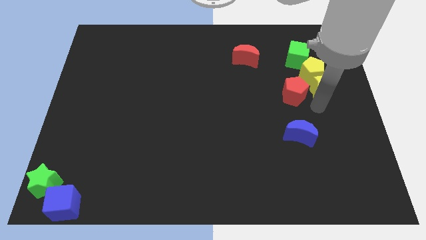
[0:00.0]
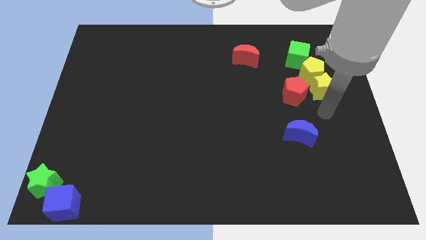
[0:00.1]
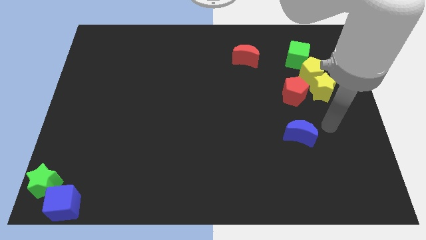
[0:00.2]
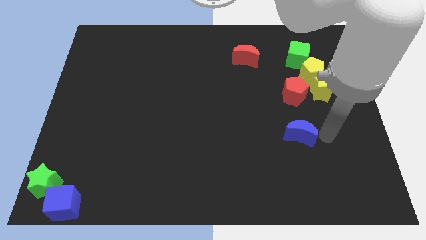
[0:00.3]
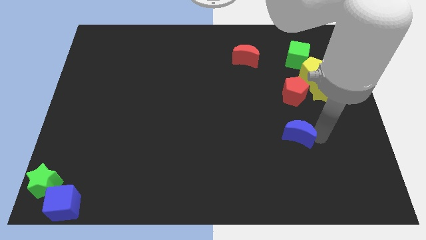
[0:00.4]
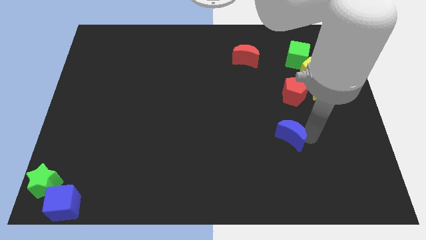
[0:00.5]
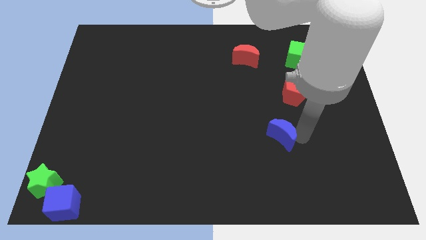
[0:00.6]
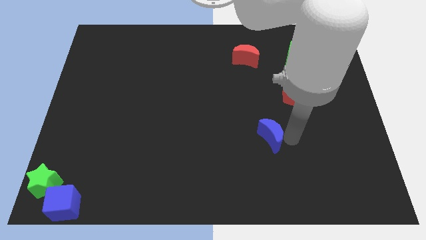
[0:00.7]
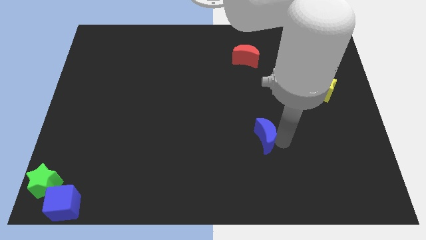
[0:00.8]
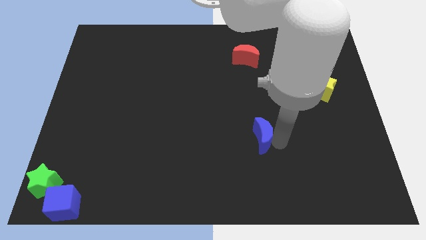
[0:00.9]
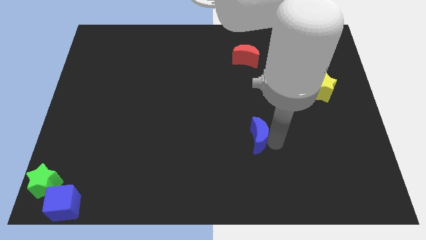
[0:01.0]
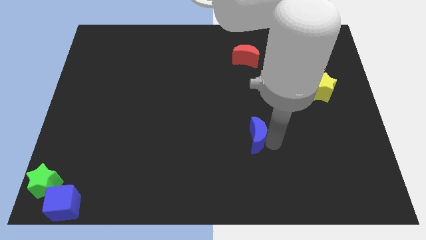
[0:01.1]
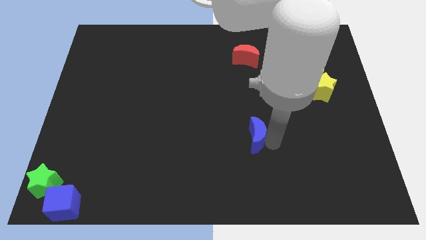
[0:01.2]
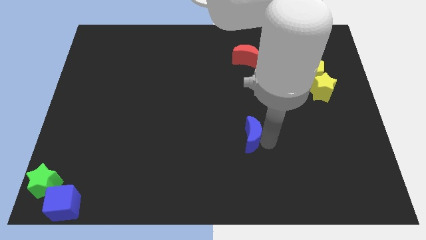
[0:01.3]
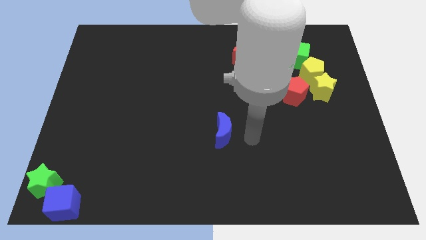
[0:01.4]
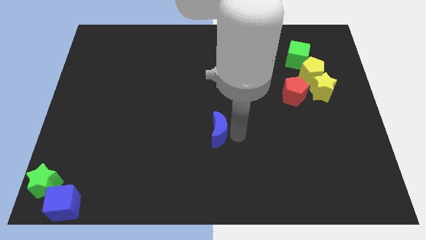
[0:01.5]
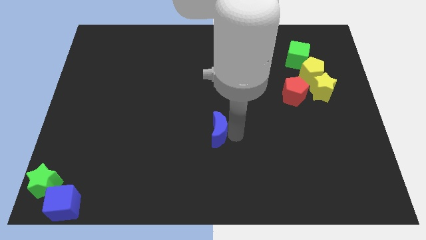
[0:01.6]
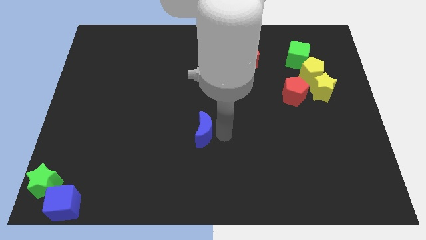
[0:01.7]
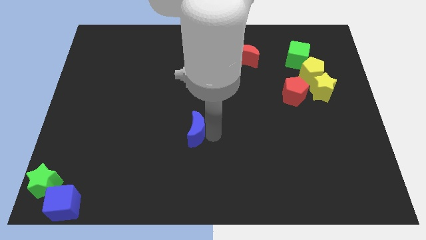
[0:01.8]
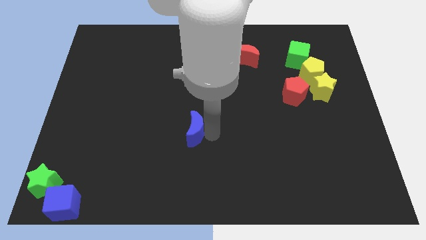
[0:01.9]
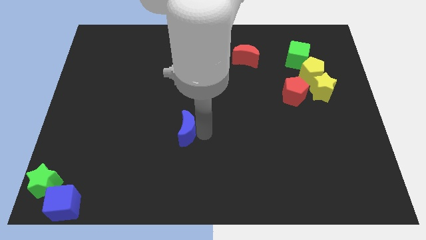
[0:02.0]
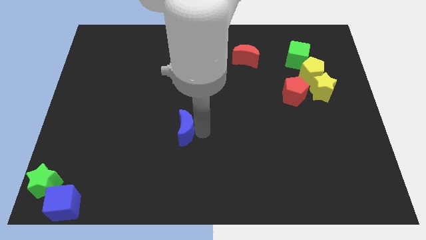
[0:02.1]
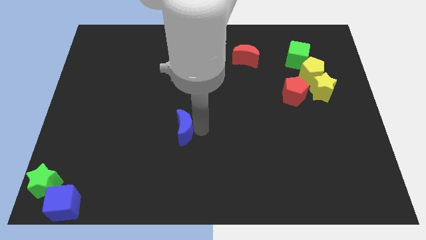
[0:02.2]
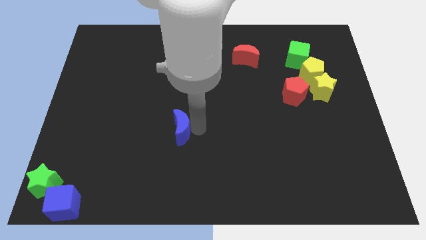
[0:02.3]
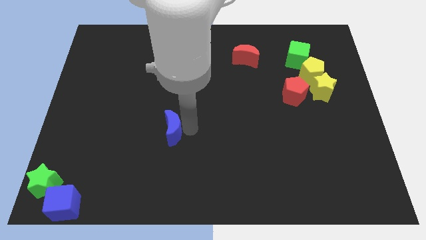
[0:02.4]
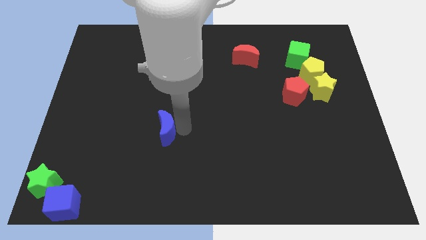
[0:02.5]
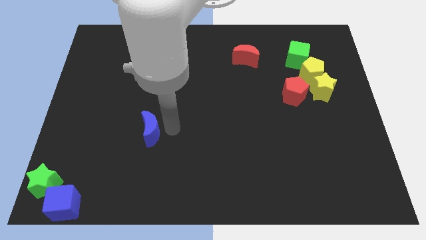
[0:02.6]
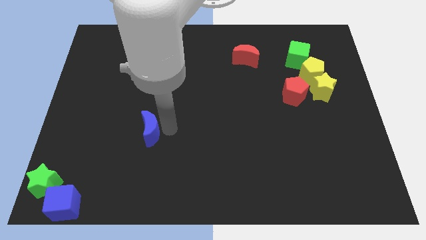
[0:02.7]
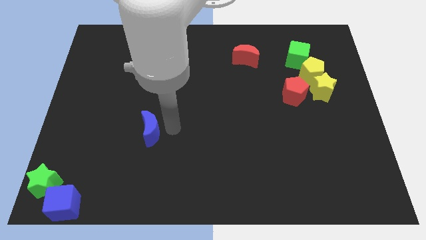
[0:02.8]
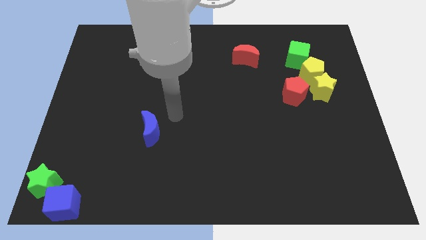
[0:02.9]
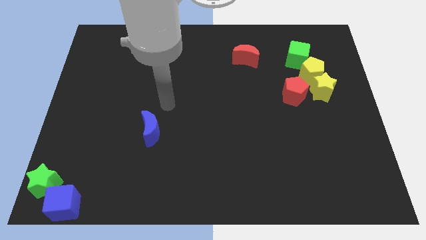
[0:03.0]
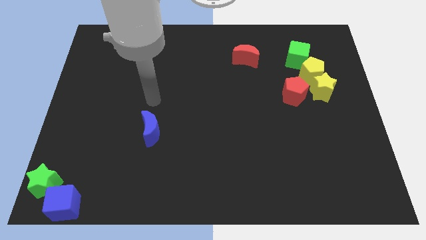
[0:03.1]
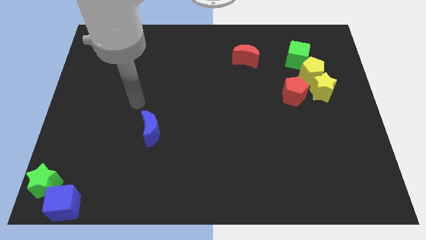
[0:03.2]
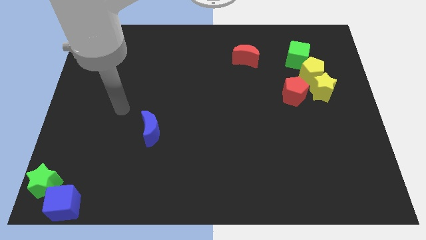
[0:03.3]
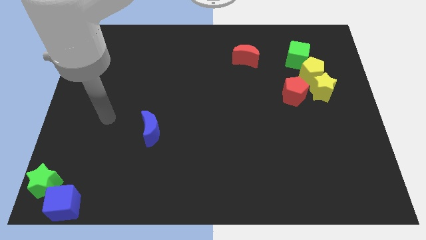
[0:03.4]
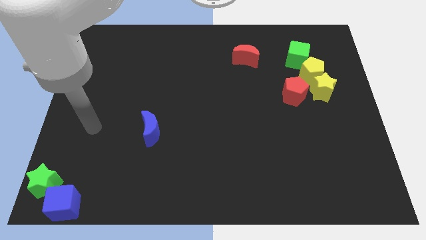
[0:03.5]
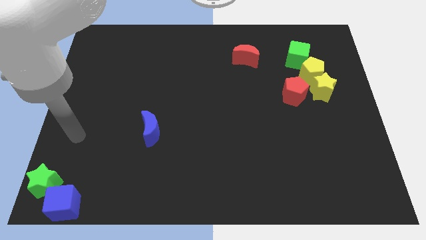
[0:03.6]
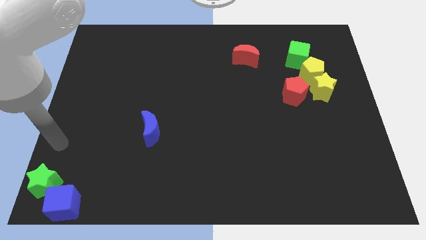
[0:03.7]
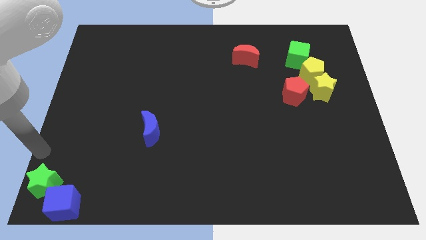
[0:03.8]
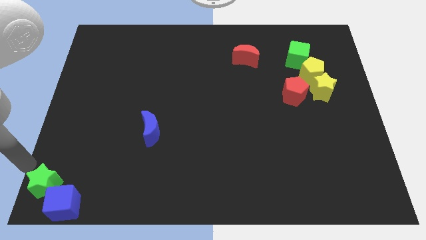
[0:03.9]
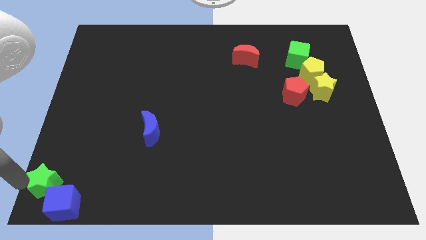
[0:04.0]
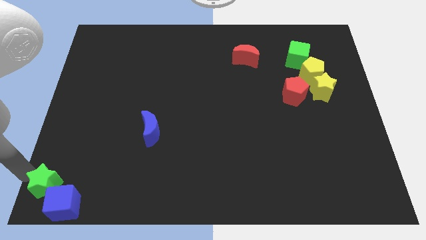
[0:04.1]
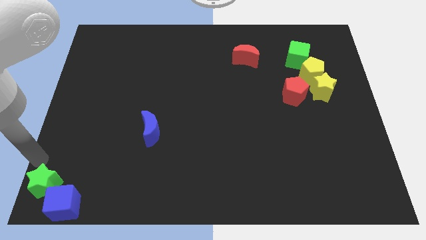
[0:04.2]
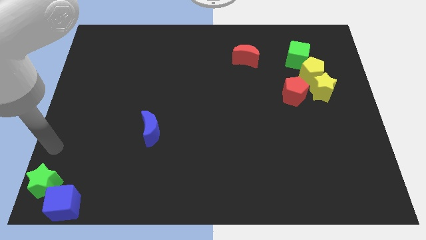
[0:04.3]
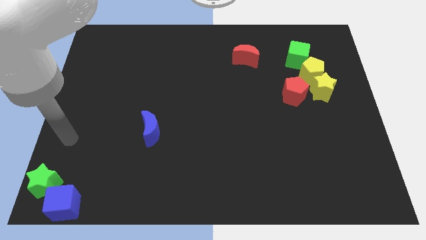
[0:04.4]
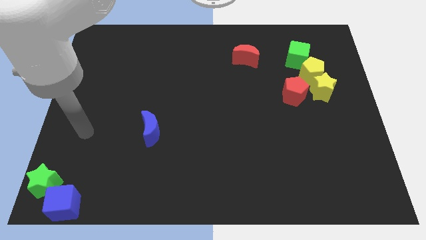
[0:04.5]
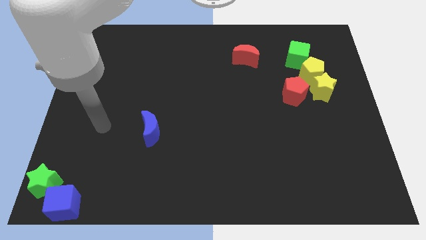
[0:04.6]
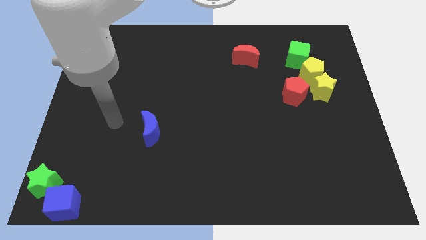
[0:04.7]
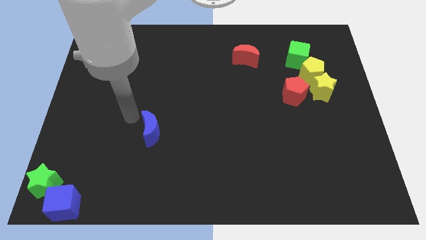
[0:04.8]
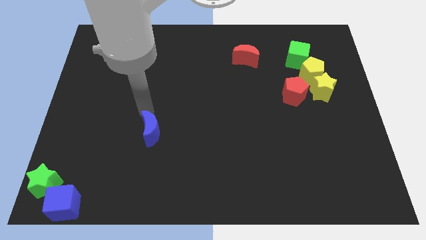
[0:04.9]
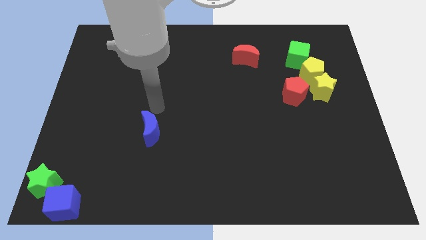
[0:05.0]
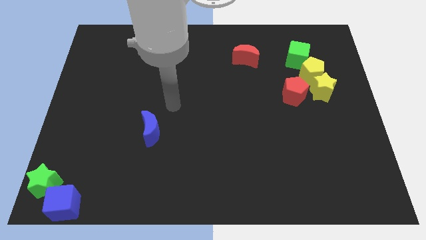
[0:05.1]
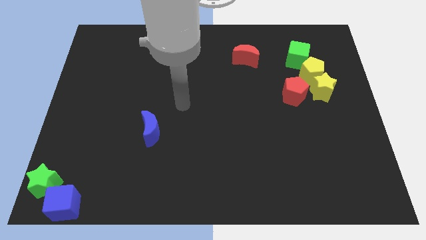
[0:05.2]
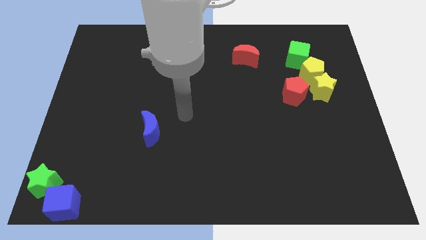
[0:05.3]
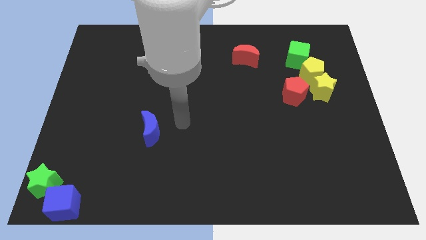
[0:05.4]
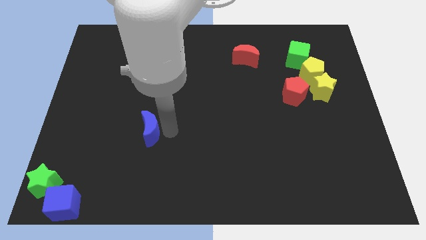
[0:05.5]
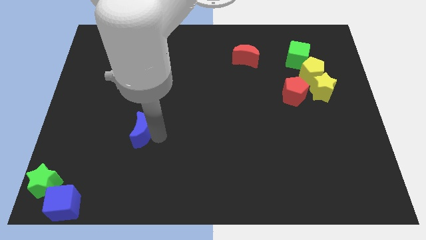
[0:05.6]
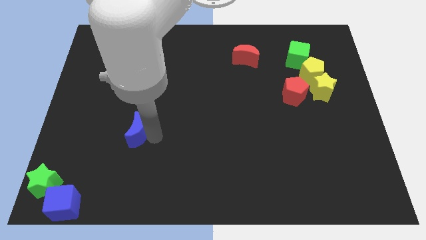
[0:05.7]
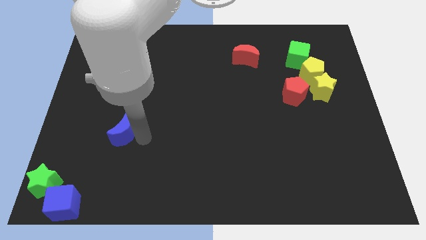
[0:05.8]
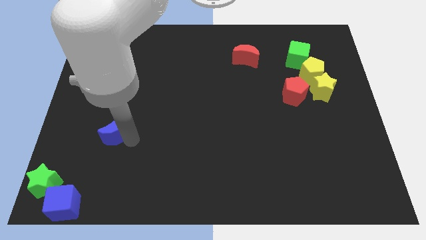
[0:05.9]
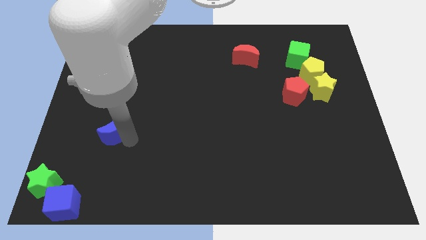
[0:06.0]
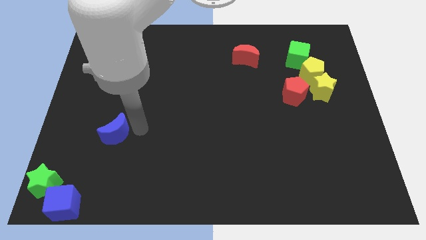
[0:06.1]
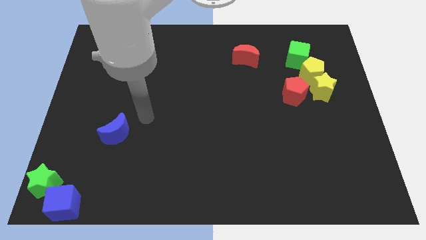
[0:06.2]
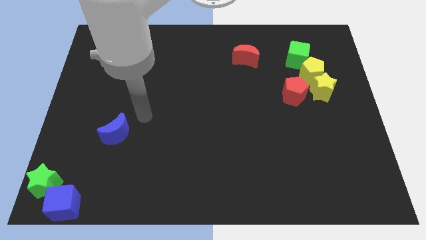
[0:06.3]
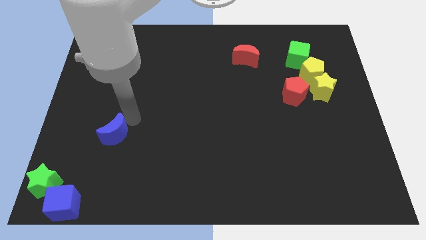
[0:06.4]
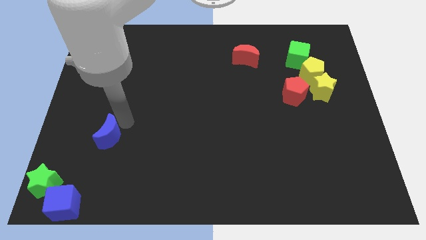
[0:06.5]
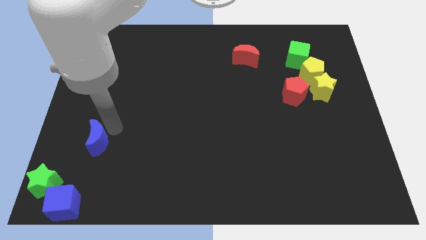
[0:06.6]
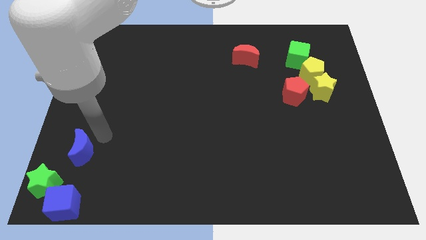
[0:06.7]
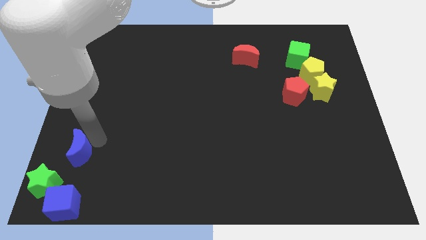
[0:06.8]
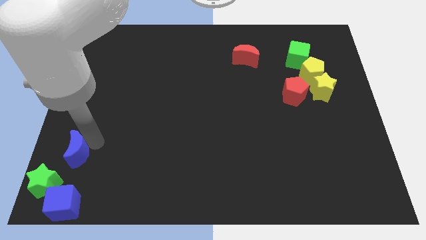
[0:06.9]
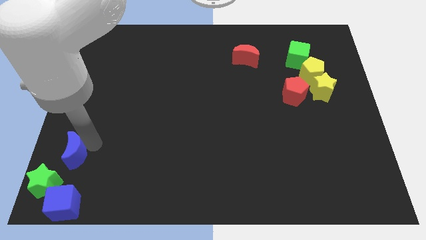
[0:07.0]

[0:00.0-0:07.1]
place blue crescent above the blue cube

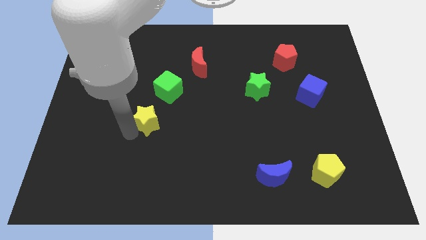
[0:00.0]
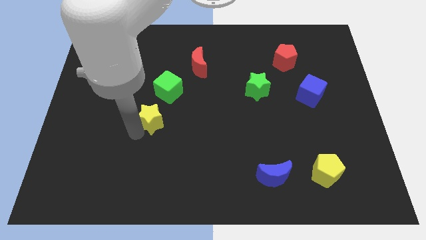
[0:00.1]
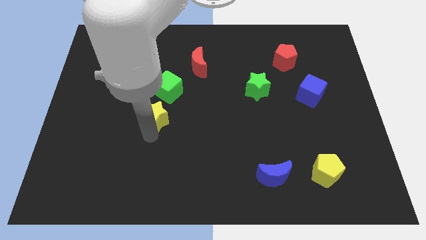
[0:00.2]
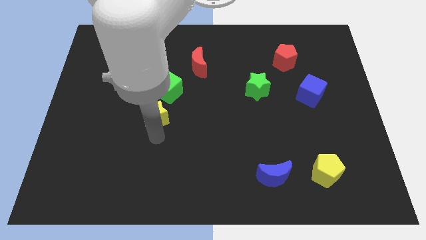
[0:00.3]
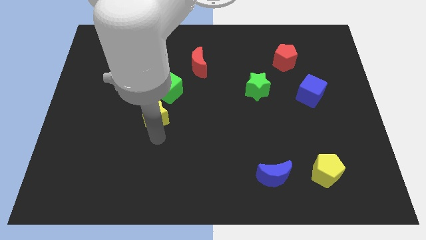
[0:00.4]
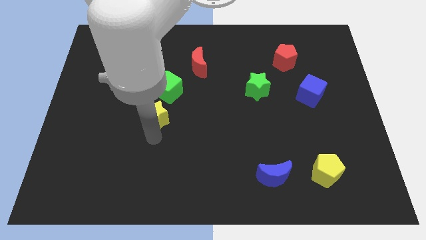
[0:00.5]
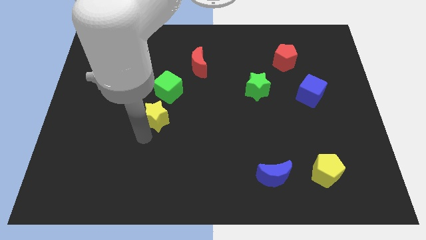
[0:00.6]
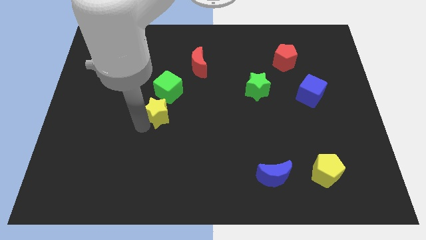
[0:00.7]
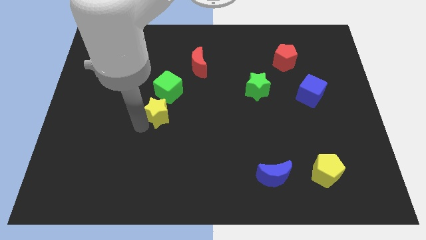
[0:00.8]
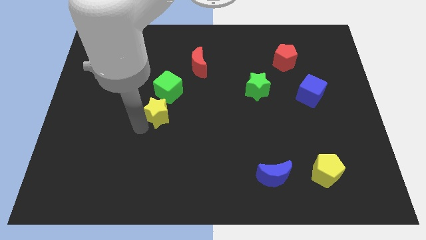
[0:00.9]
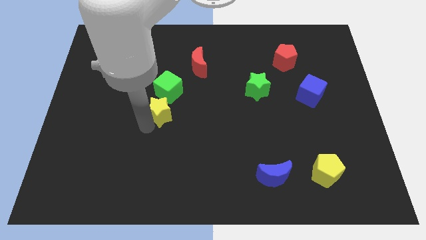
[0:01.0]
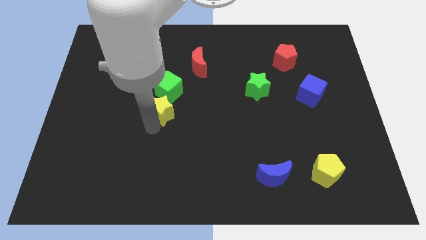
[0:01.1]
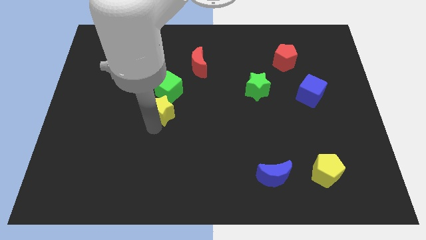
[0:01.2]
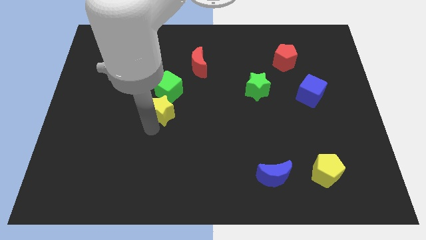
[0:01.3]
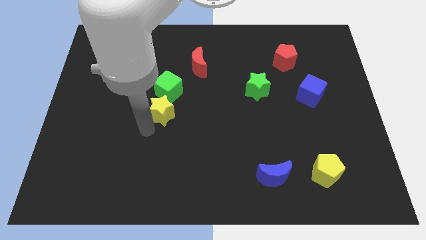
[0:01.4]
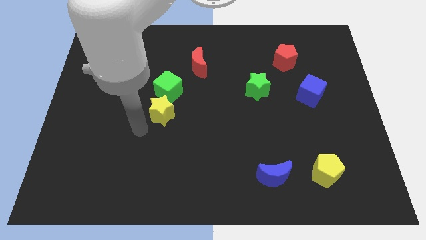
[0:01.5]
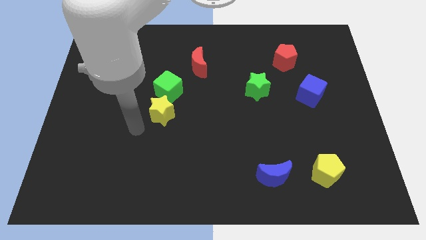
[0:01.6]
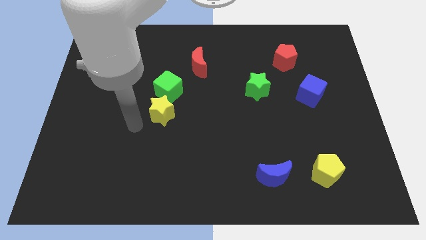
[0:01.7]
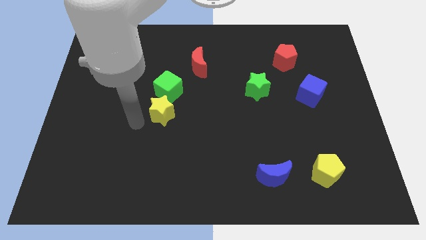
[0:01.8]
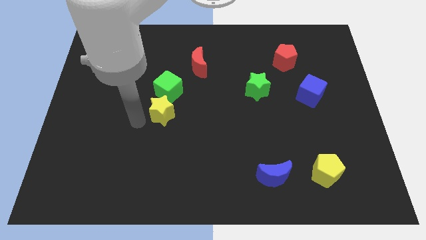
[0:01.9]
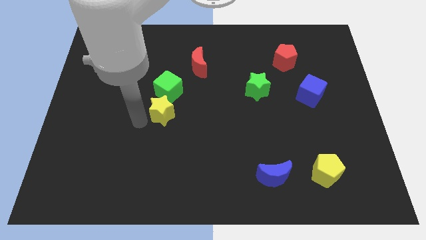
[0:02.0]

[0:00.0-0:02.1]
move yellow star near green cube
